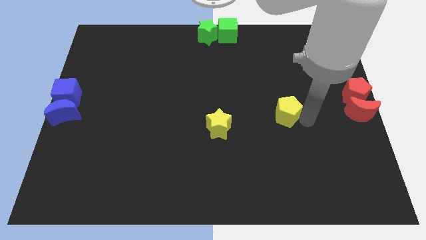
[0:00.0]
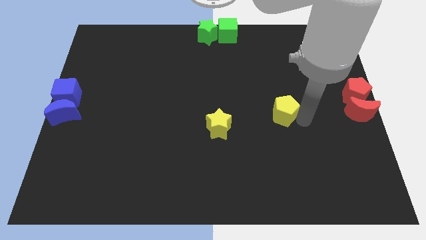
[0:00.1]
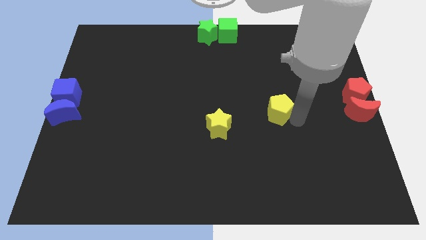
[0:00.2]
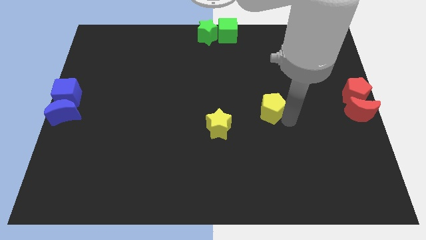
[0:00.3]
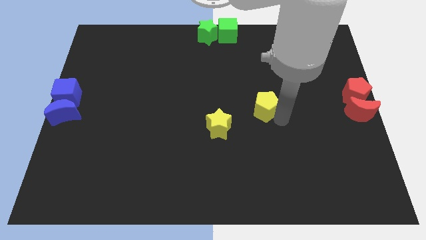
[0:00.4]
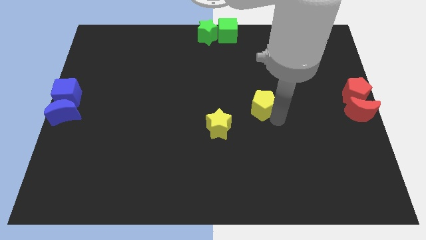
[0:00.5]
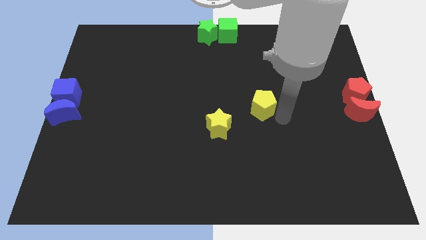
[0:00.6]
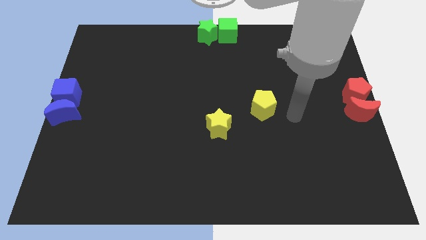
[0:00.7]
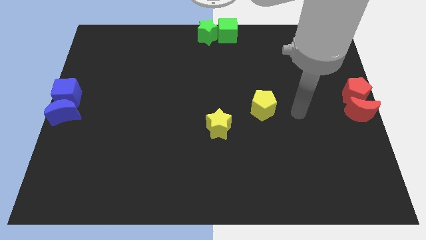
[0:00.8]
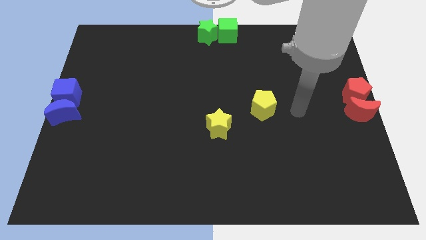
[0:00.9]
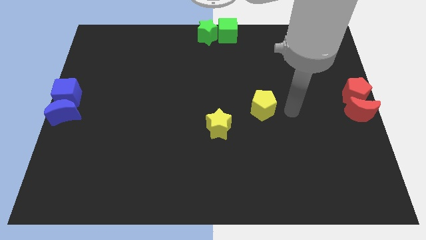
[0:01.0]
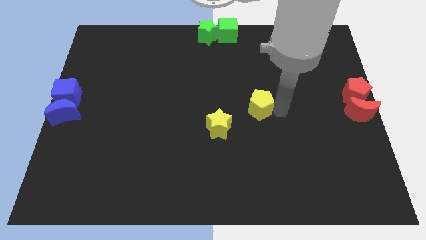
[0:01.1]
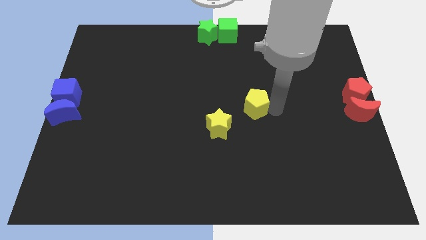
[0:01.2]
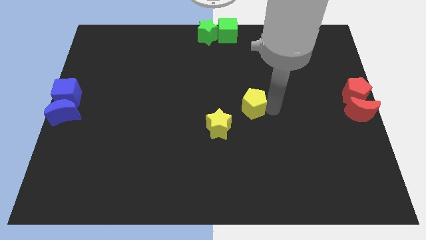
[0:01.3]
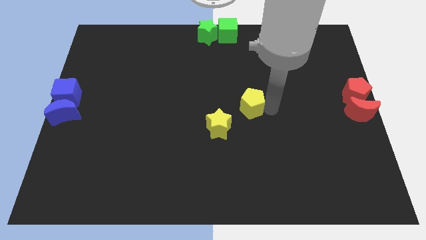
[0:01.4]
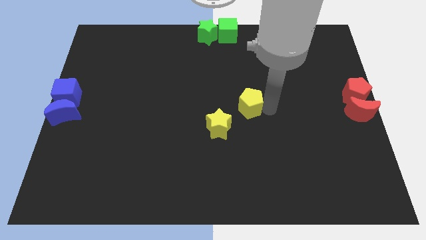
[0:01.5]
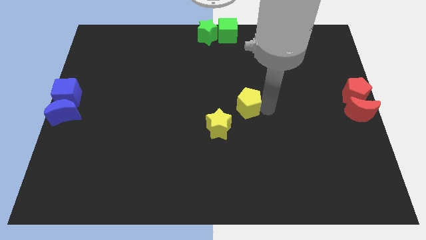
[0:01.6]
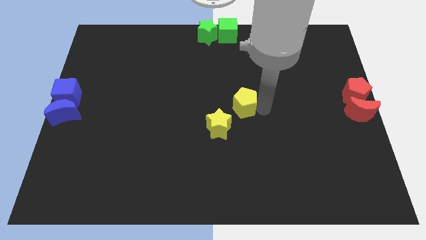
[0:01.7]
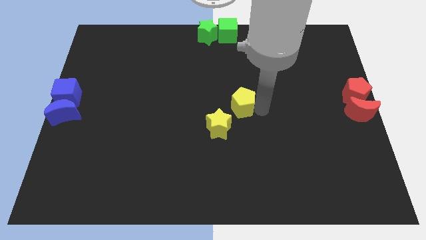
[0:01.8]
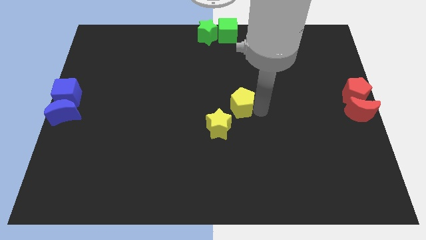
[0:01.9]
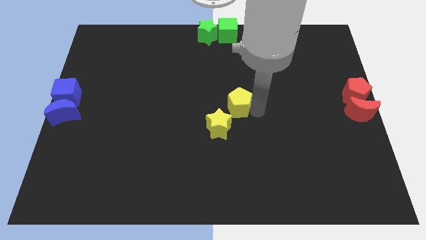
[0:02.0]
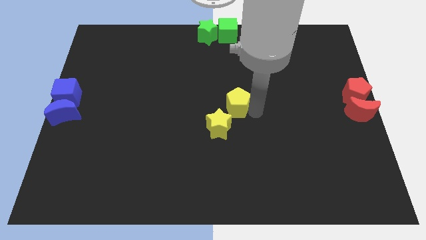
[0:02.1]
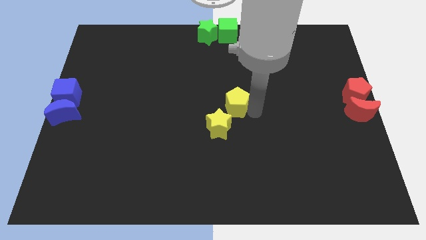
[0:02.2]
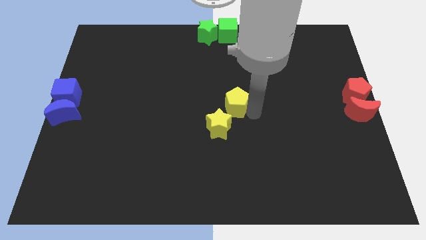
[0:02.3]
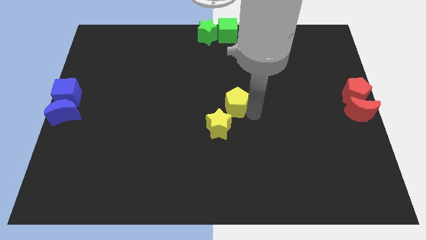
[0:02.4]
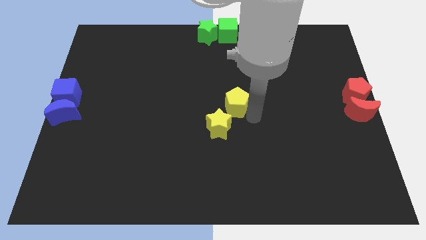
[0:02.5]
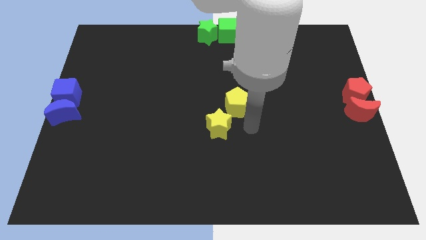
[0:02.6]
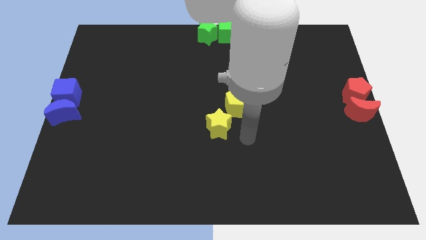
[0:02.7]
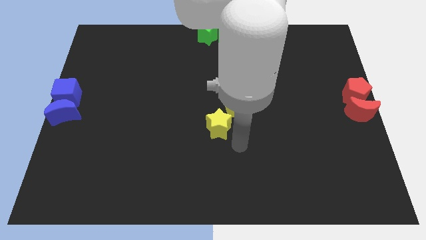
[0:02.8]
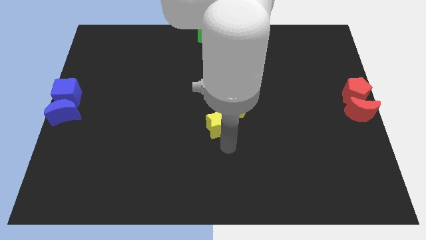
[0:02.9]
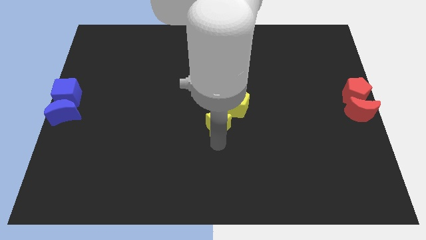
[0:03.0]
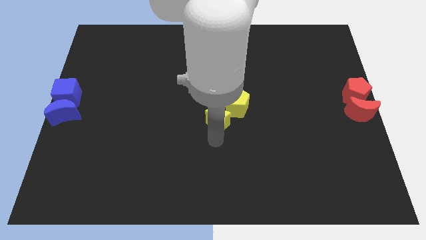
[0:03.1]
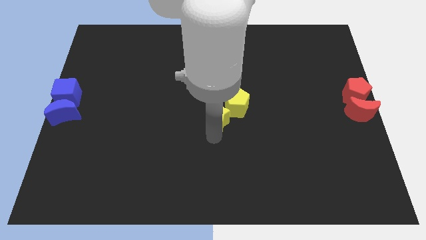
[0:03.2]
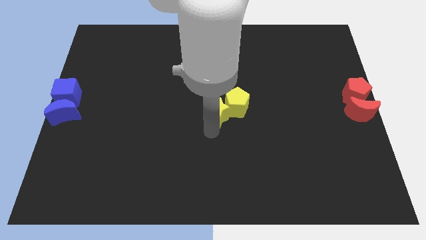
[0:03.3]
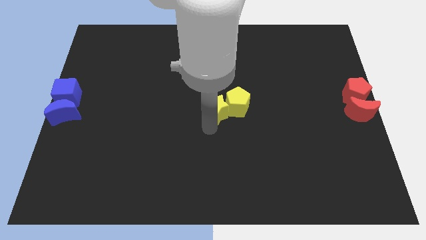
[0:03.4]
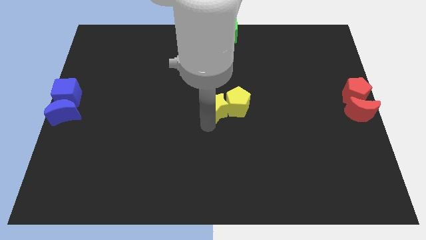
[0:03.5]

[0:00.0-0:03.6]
place the yellow blocks together at center of the board

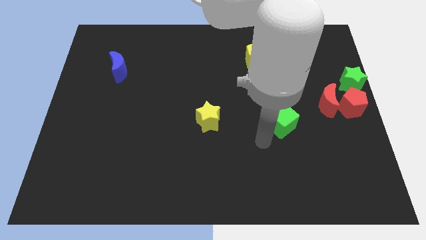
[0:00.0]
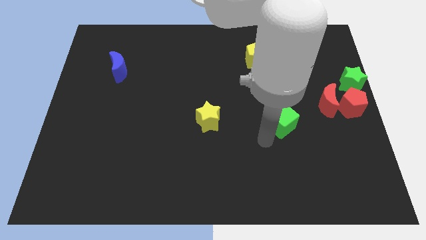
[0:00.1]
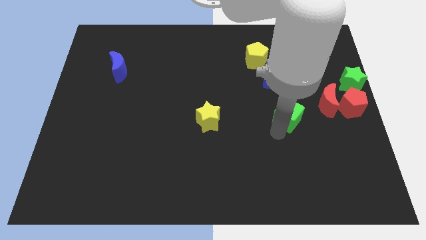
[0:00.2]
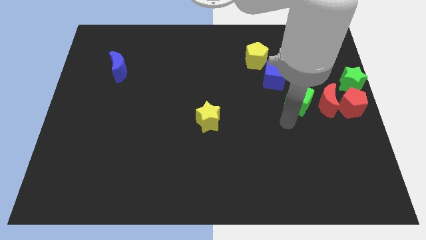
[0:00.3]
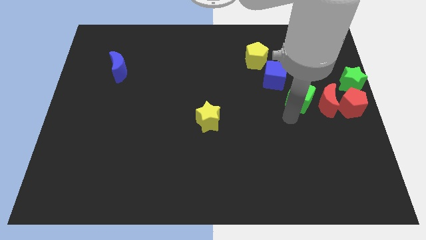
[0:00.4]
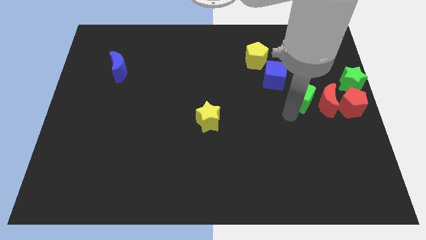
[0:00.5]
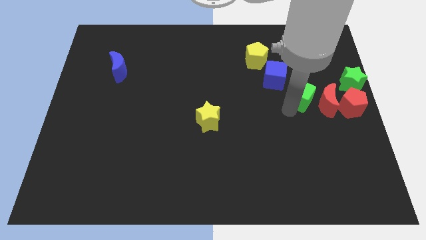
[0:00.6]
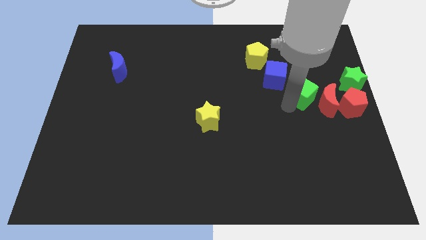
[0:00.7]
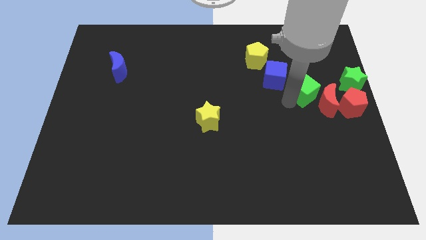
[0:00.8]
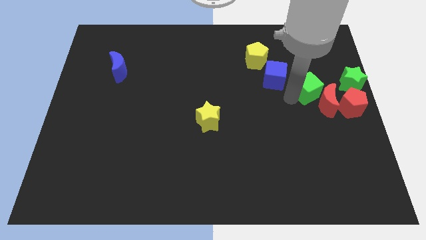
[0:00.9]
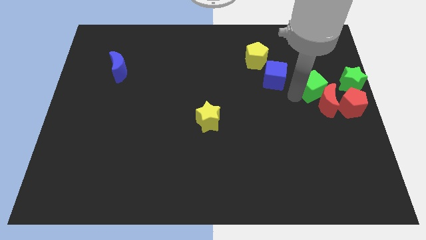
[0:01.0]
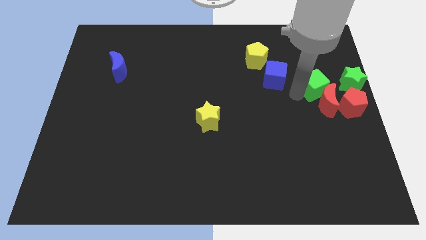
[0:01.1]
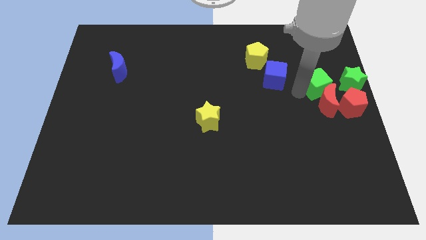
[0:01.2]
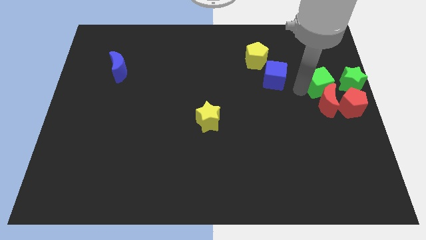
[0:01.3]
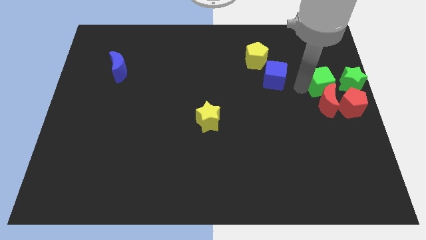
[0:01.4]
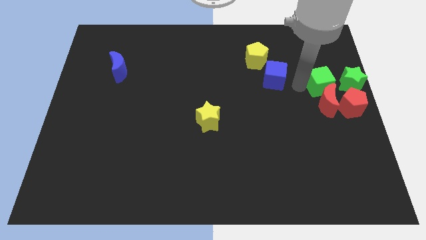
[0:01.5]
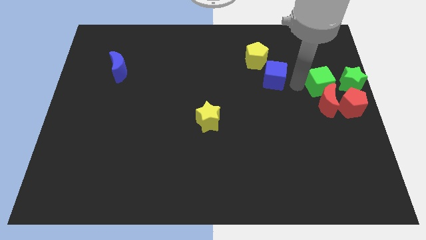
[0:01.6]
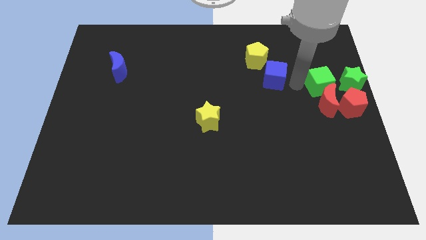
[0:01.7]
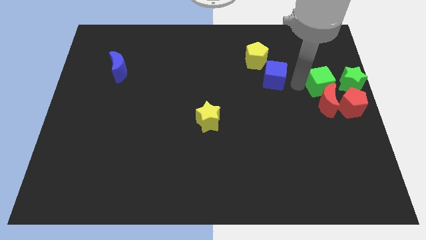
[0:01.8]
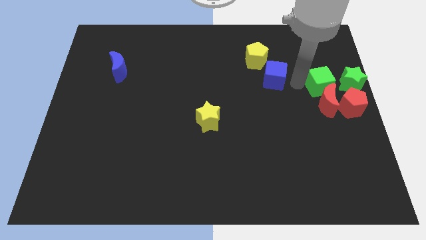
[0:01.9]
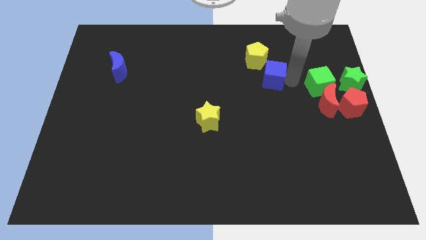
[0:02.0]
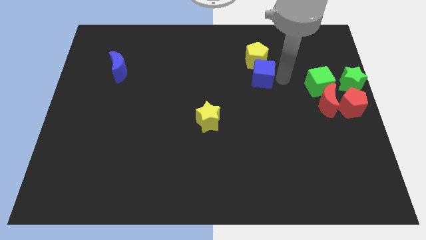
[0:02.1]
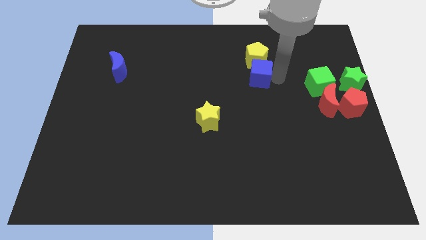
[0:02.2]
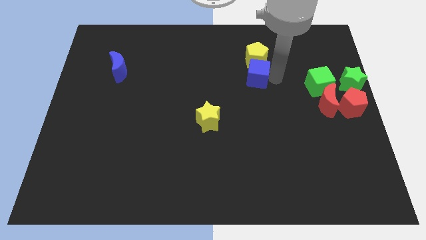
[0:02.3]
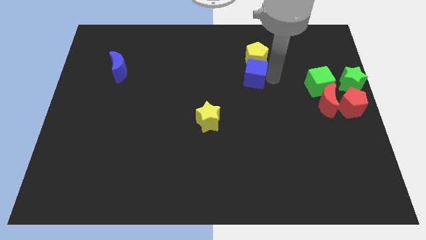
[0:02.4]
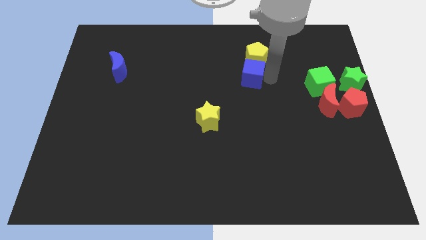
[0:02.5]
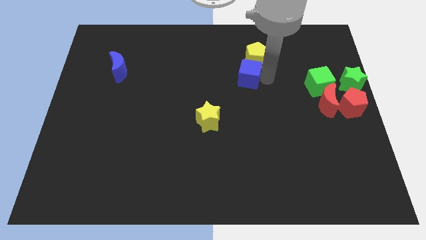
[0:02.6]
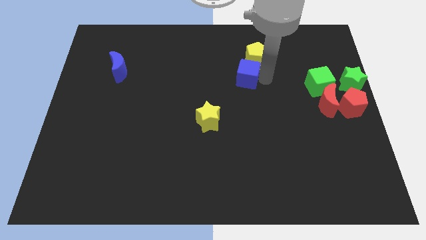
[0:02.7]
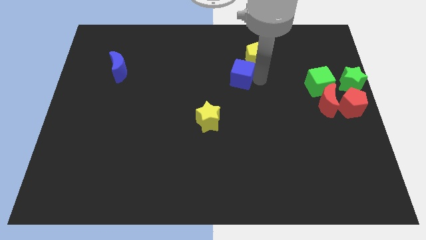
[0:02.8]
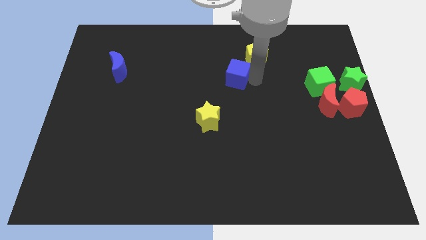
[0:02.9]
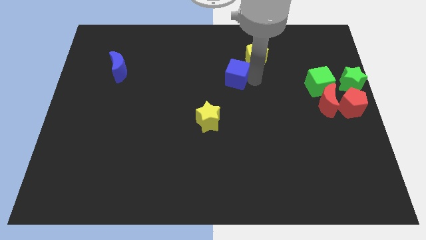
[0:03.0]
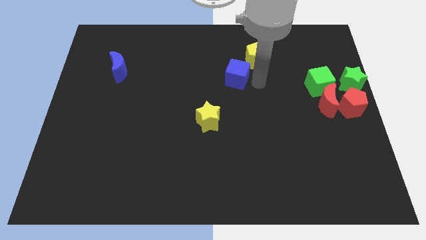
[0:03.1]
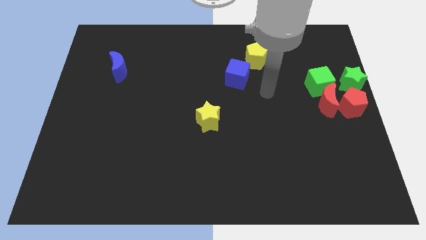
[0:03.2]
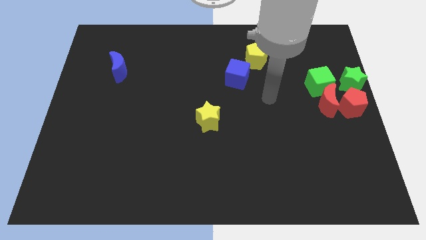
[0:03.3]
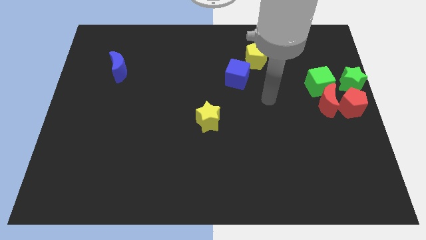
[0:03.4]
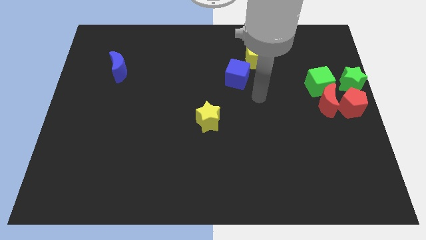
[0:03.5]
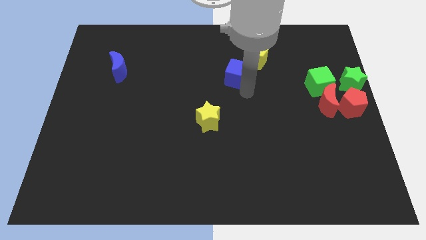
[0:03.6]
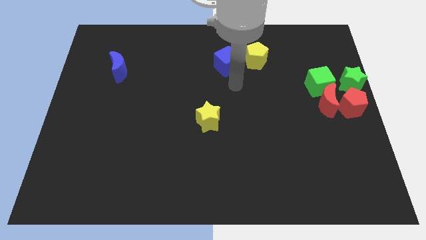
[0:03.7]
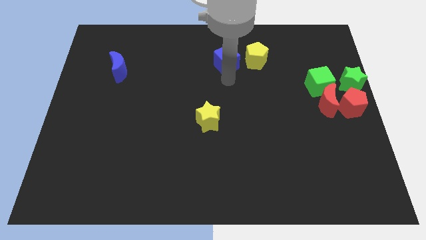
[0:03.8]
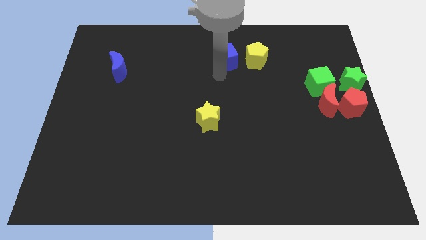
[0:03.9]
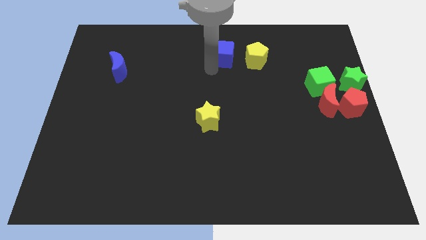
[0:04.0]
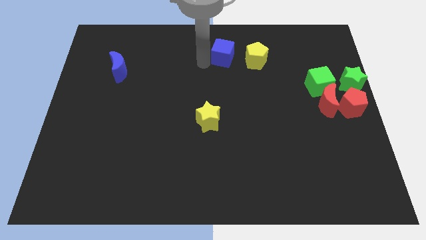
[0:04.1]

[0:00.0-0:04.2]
place the blue cube left to the yellow pentagon

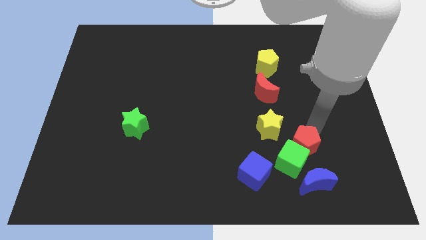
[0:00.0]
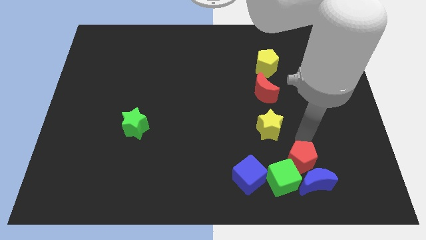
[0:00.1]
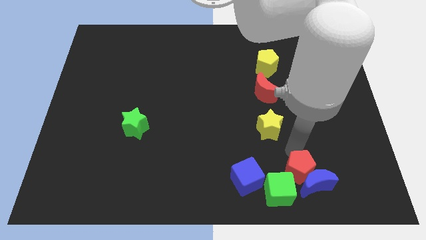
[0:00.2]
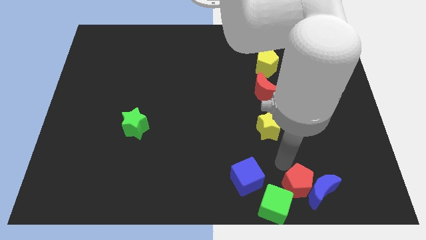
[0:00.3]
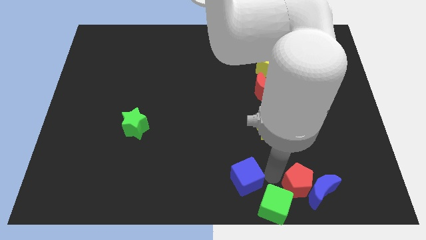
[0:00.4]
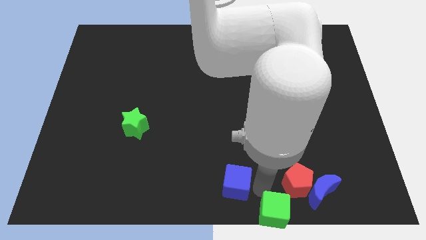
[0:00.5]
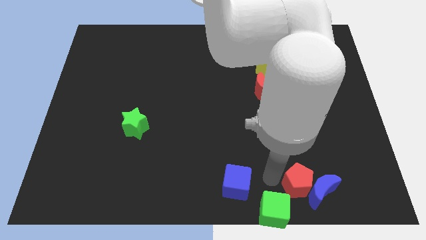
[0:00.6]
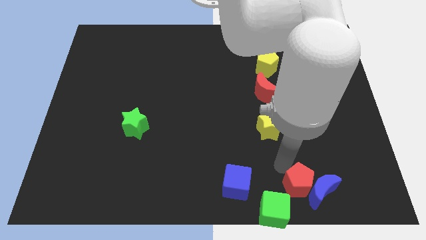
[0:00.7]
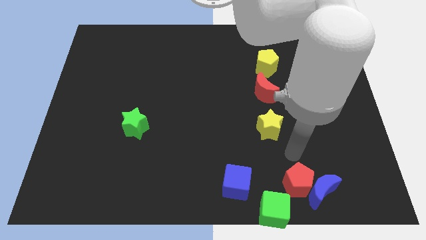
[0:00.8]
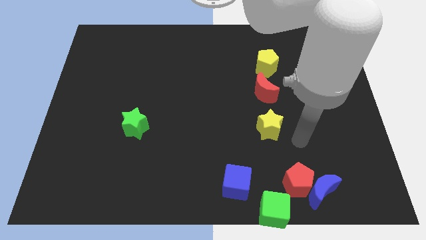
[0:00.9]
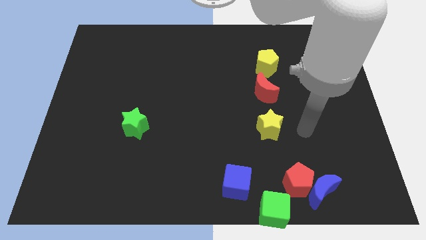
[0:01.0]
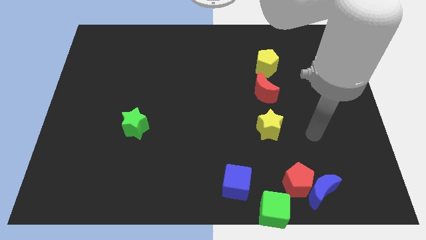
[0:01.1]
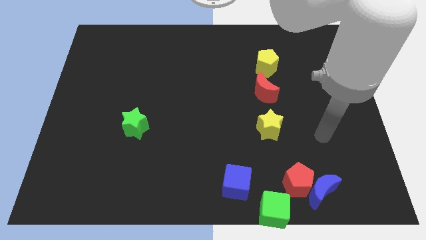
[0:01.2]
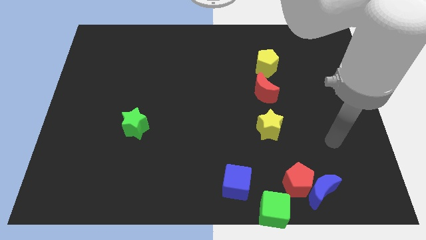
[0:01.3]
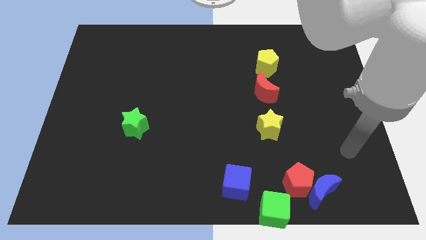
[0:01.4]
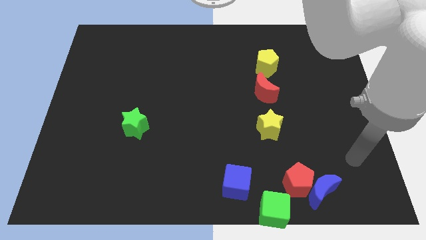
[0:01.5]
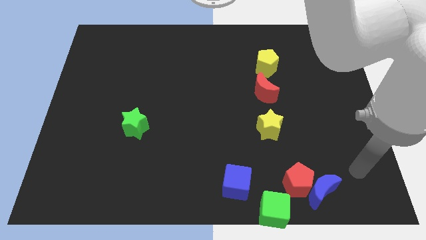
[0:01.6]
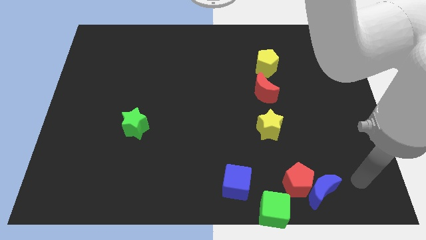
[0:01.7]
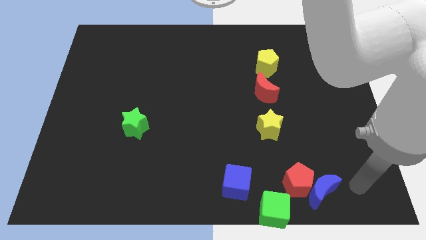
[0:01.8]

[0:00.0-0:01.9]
push the red pentagon and green cube to the bottom center
